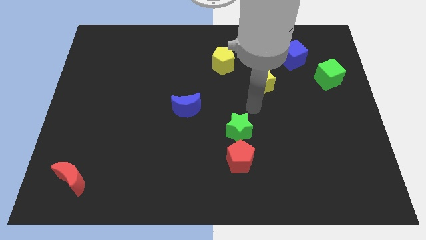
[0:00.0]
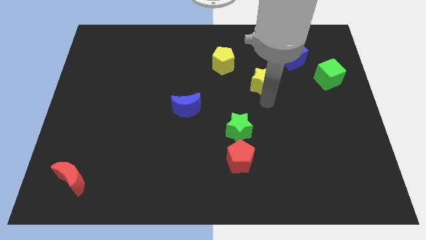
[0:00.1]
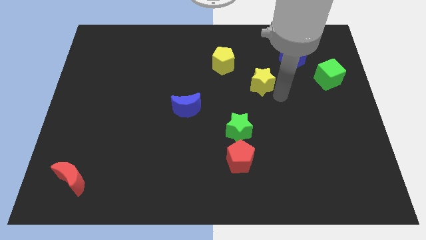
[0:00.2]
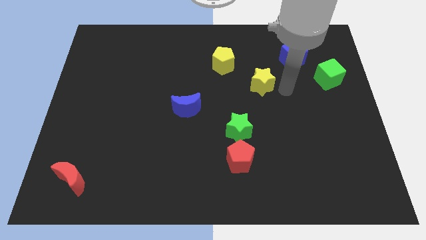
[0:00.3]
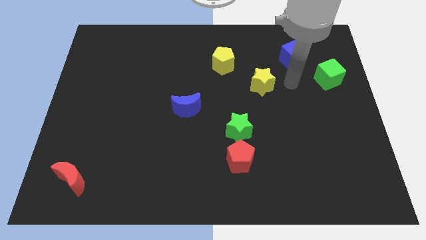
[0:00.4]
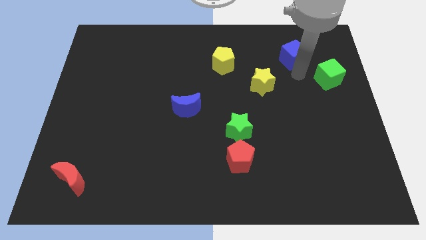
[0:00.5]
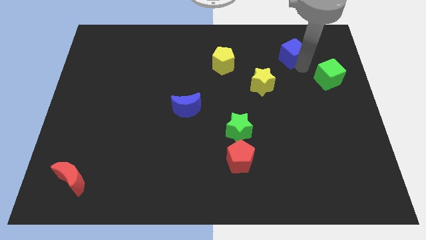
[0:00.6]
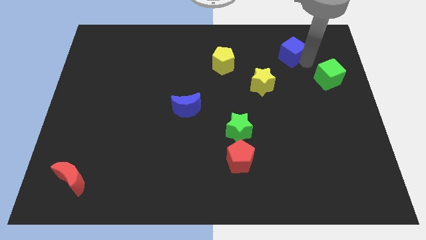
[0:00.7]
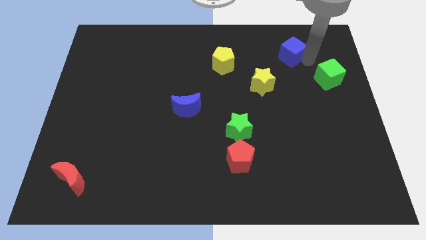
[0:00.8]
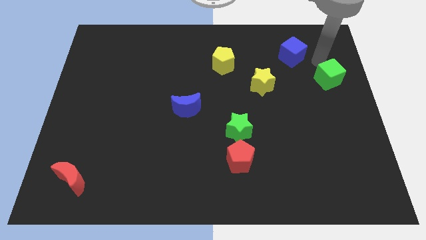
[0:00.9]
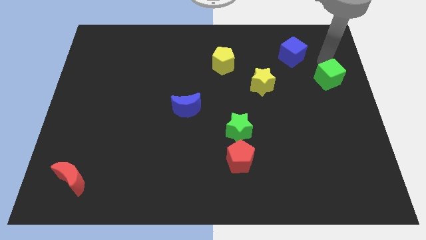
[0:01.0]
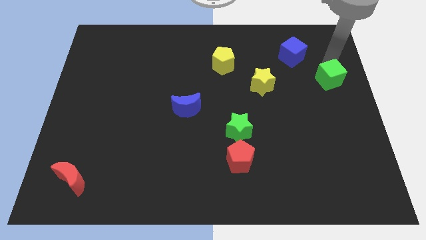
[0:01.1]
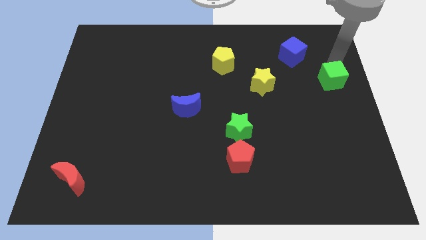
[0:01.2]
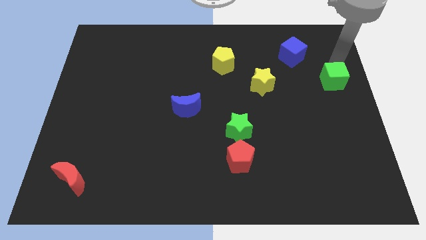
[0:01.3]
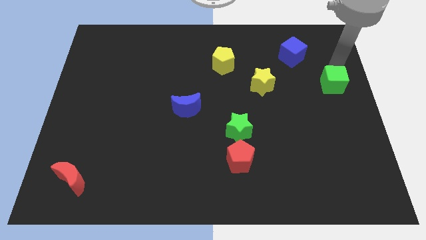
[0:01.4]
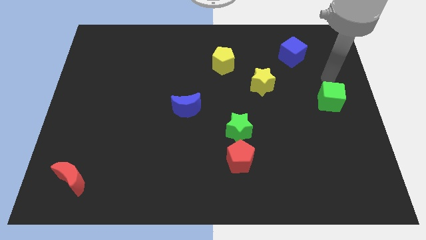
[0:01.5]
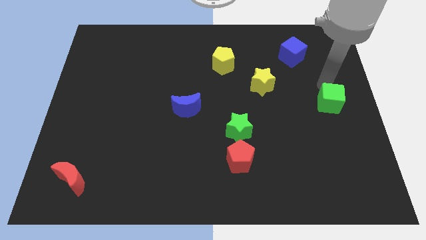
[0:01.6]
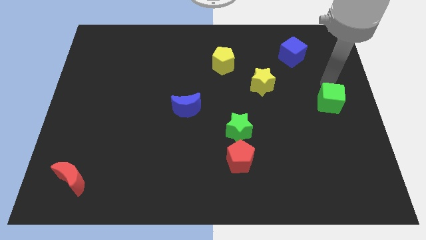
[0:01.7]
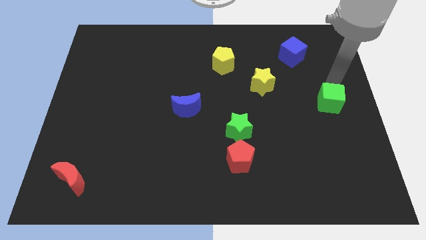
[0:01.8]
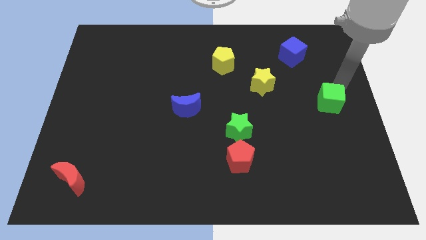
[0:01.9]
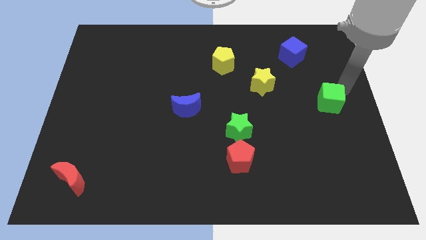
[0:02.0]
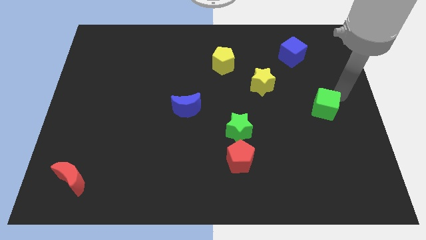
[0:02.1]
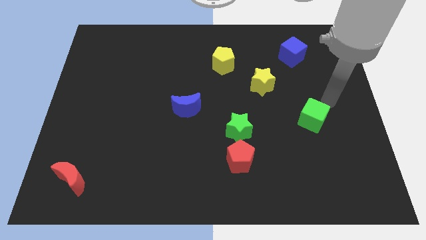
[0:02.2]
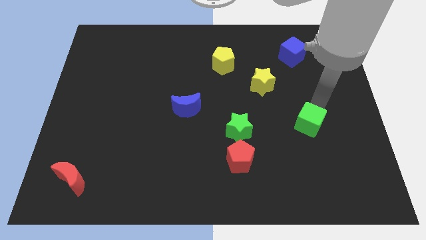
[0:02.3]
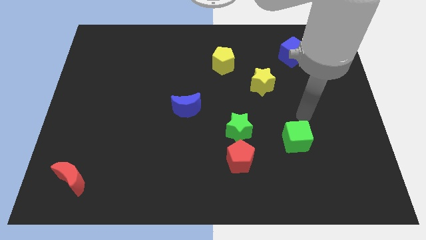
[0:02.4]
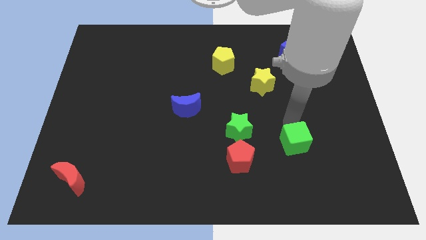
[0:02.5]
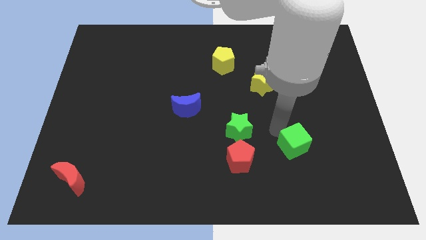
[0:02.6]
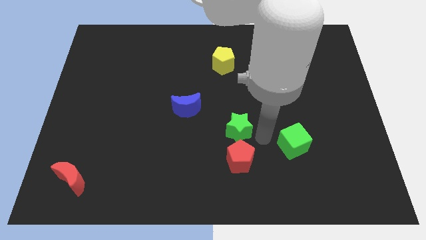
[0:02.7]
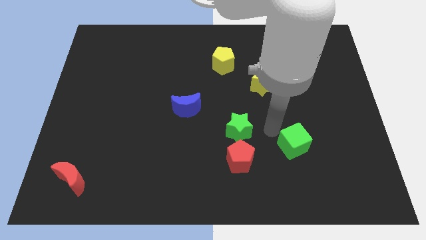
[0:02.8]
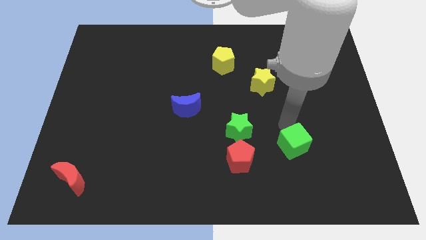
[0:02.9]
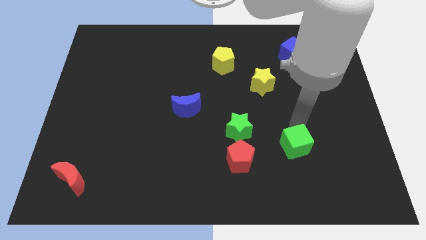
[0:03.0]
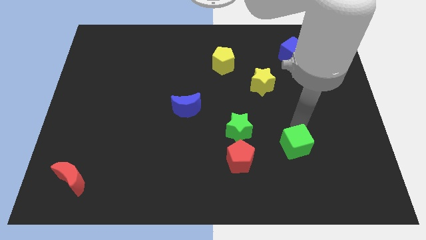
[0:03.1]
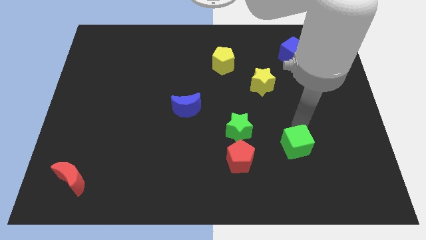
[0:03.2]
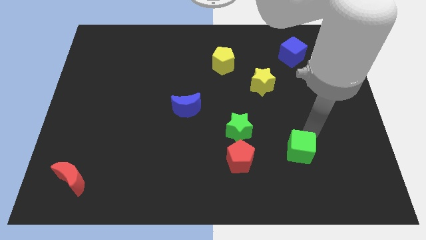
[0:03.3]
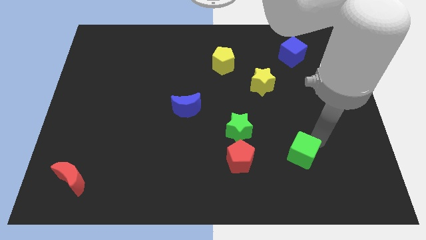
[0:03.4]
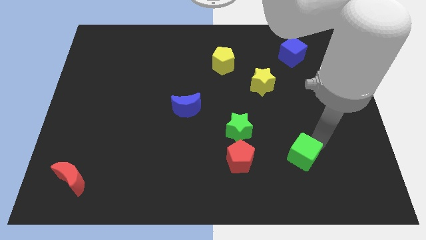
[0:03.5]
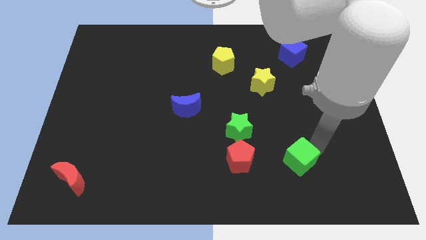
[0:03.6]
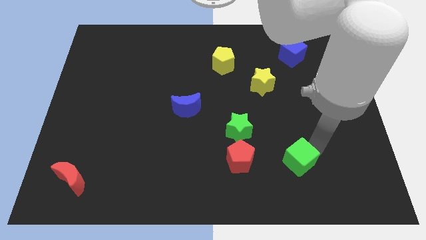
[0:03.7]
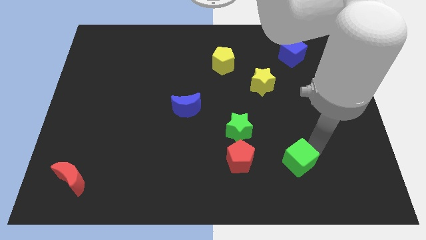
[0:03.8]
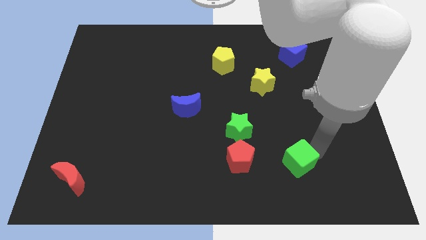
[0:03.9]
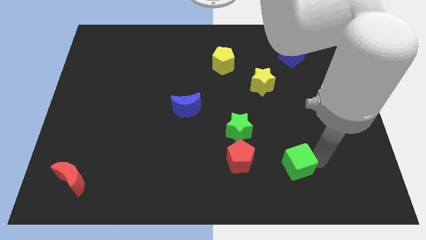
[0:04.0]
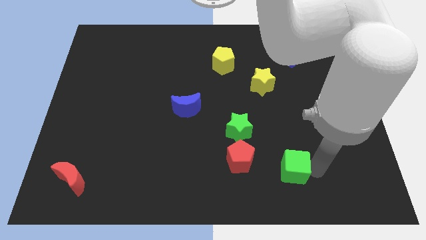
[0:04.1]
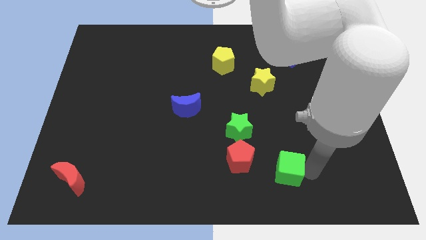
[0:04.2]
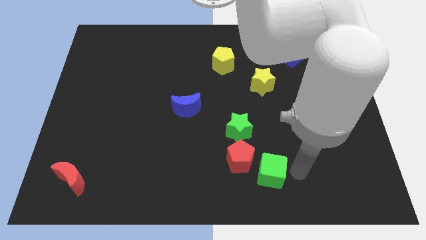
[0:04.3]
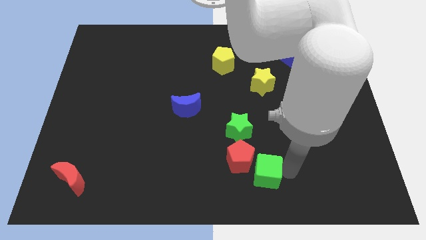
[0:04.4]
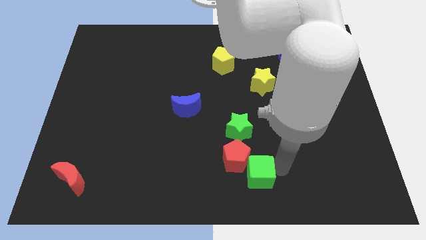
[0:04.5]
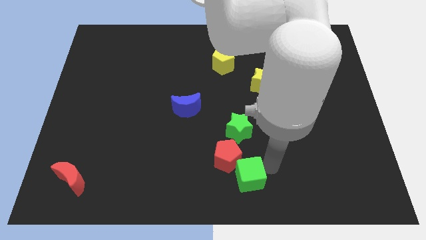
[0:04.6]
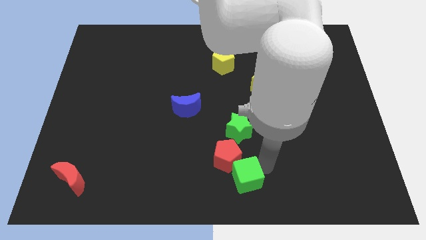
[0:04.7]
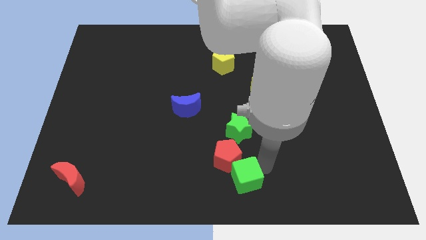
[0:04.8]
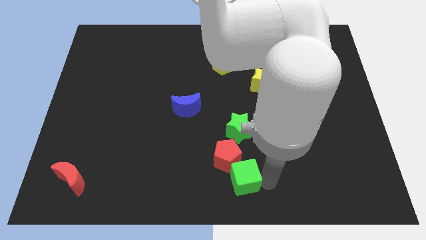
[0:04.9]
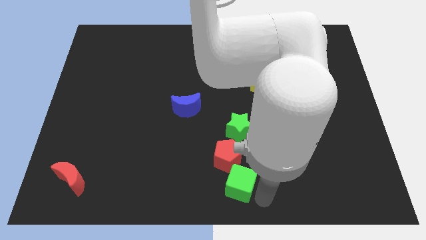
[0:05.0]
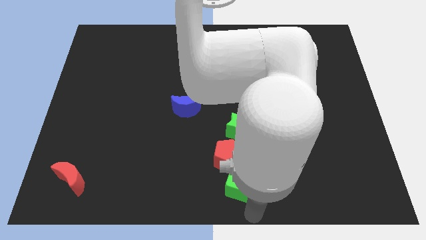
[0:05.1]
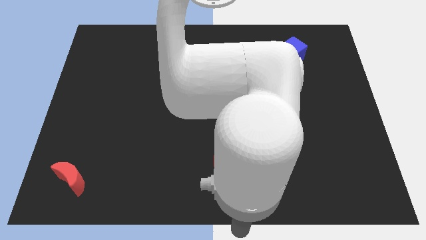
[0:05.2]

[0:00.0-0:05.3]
move the green cube towards the bottom center

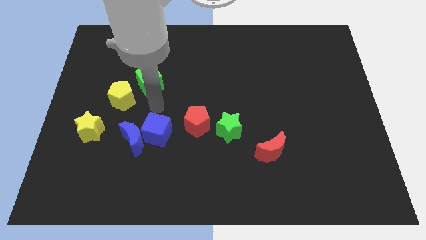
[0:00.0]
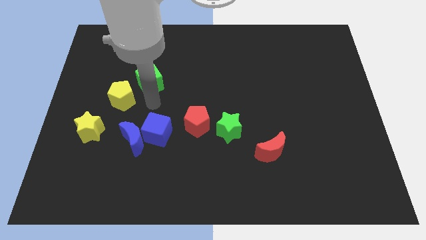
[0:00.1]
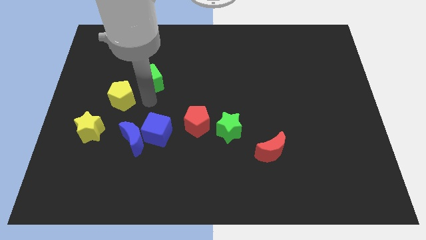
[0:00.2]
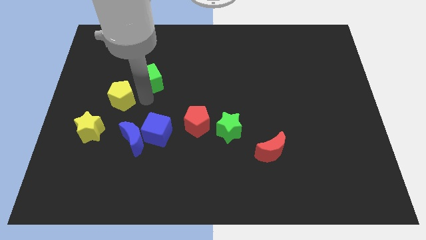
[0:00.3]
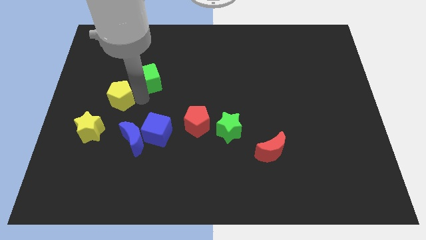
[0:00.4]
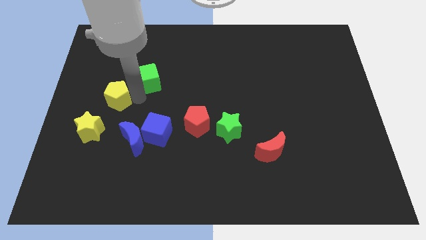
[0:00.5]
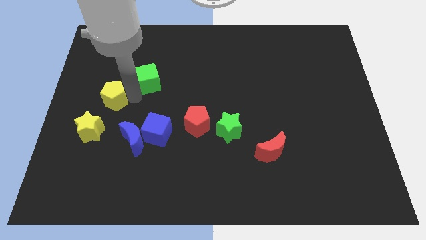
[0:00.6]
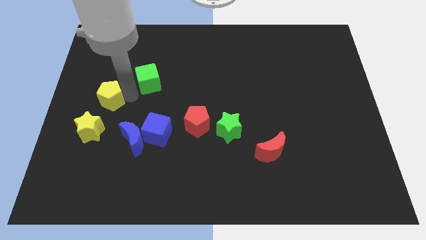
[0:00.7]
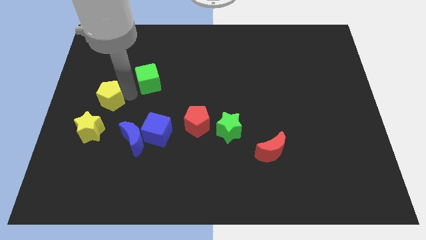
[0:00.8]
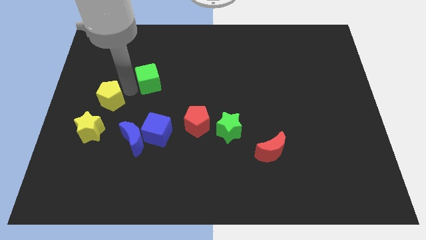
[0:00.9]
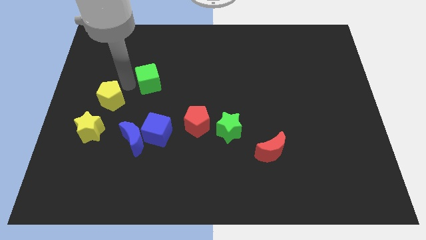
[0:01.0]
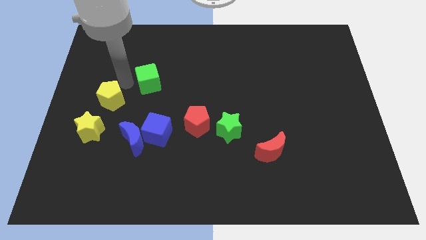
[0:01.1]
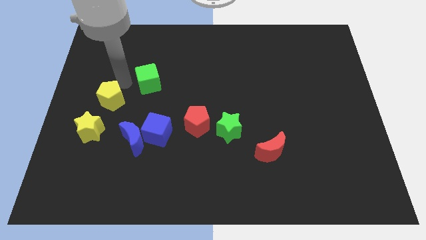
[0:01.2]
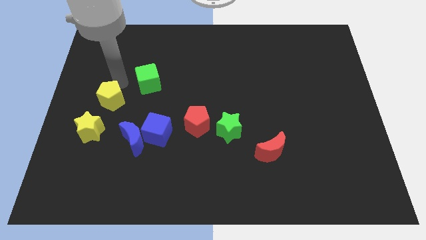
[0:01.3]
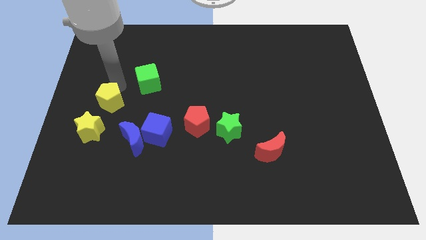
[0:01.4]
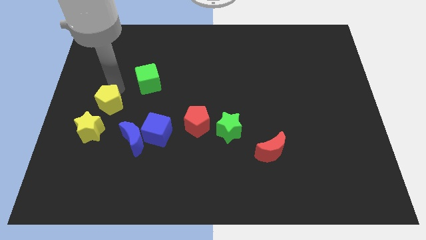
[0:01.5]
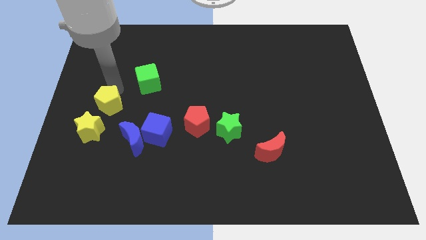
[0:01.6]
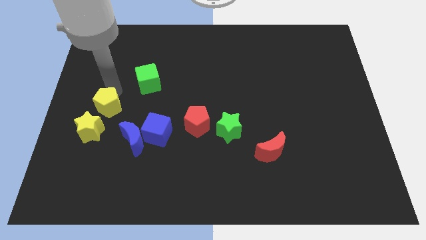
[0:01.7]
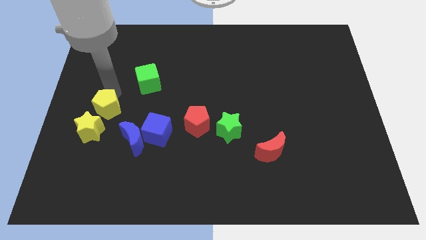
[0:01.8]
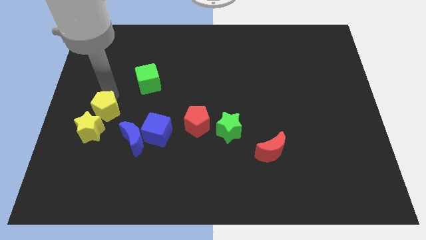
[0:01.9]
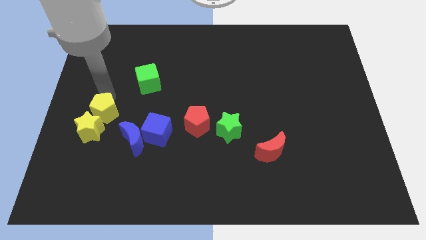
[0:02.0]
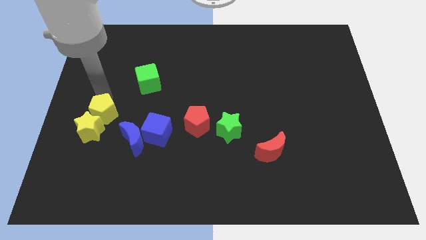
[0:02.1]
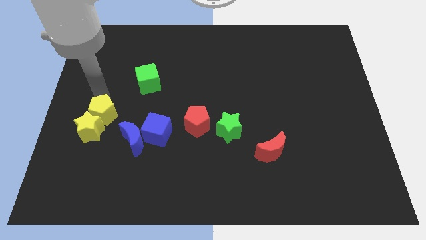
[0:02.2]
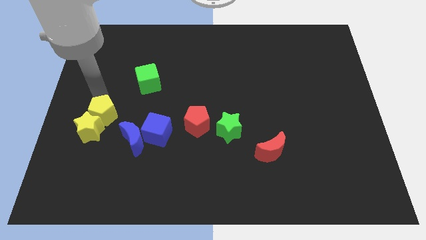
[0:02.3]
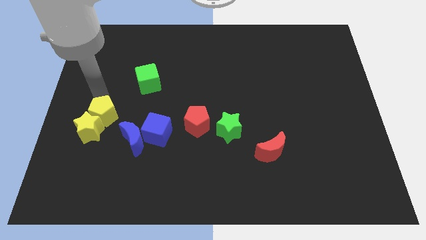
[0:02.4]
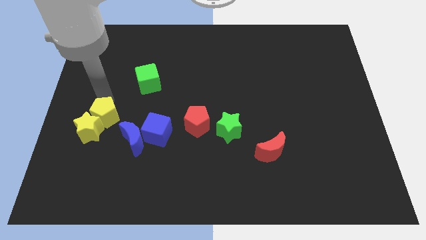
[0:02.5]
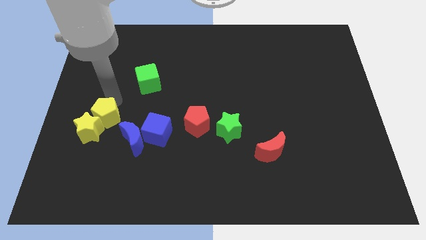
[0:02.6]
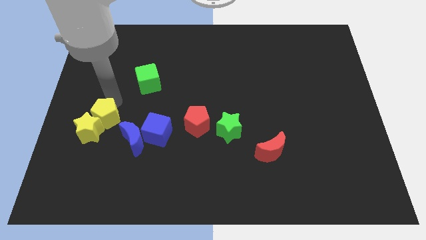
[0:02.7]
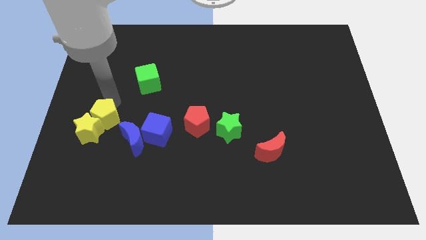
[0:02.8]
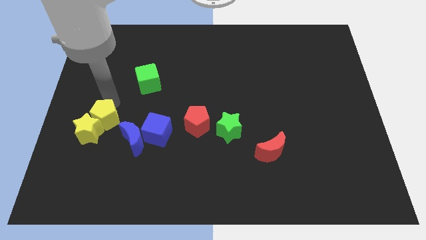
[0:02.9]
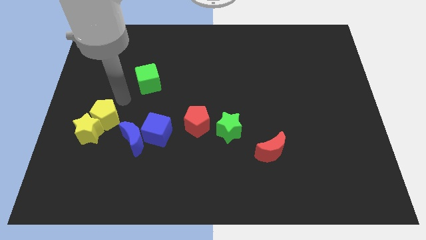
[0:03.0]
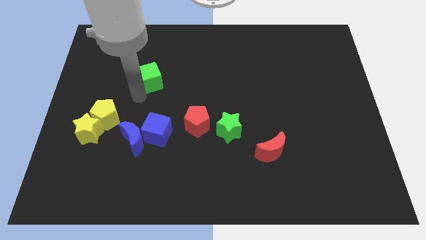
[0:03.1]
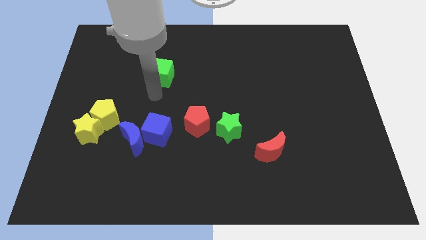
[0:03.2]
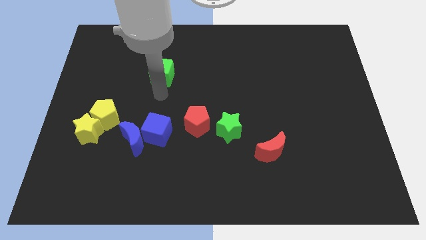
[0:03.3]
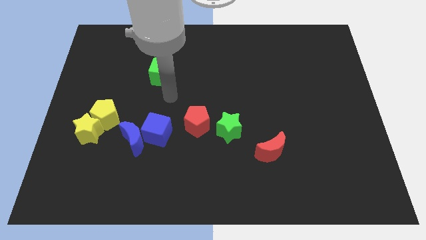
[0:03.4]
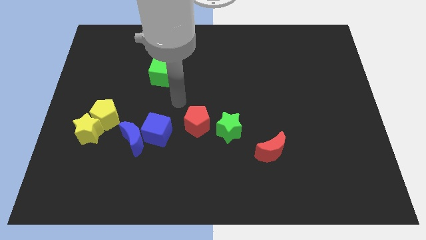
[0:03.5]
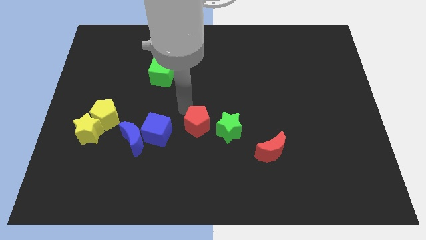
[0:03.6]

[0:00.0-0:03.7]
separate yellow pentagon from green cube
